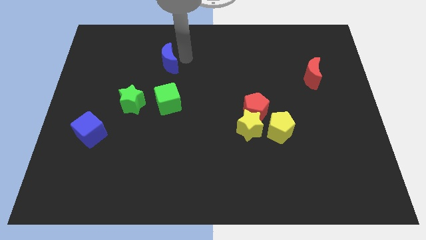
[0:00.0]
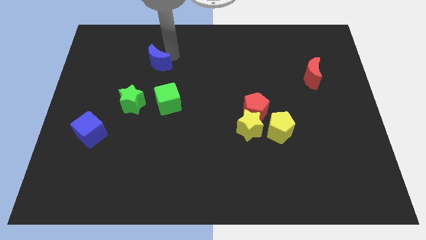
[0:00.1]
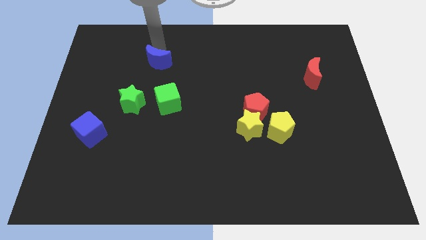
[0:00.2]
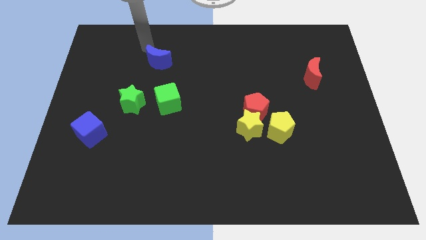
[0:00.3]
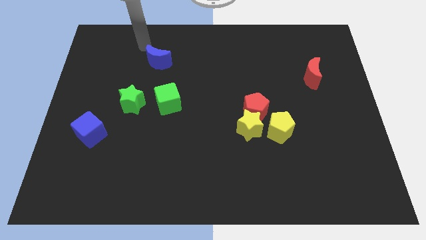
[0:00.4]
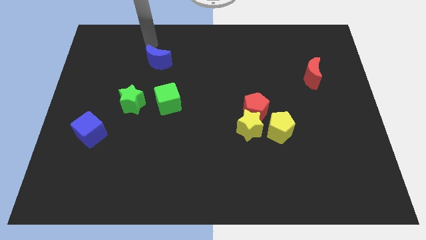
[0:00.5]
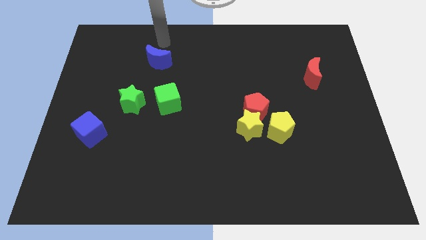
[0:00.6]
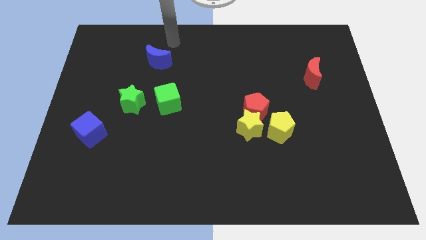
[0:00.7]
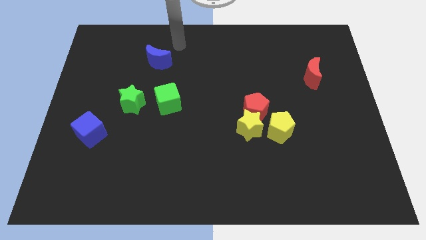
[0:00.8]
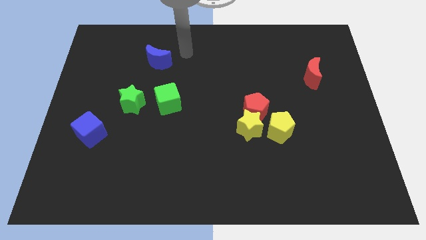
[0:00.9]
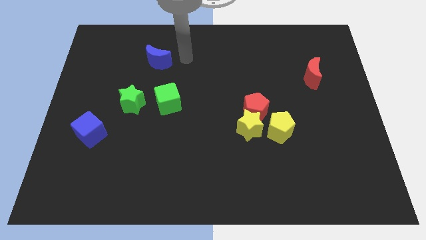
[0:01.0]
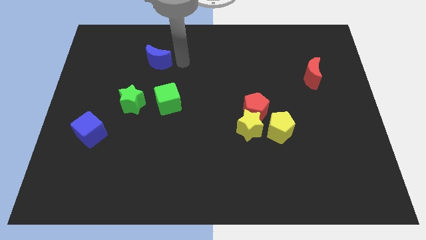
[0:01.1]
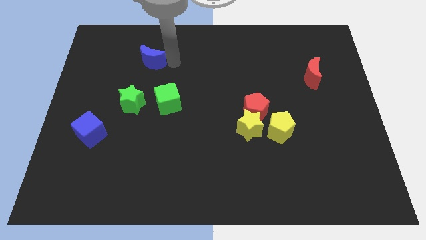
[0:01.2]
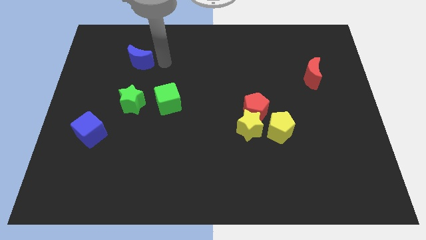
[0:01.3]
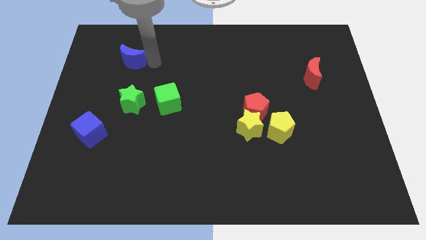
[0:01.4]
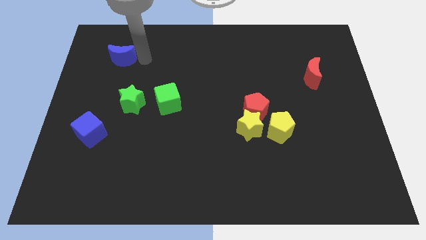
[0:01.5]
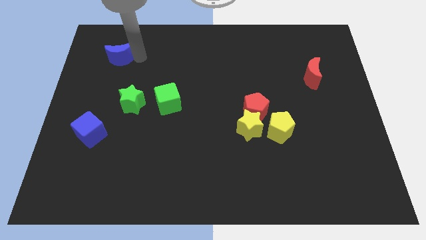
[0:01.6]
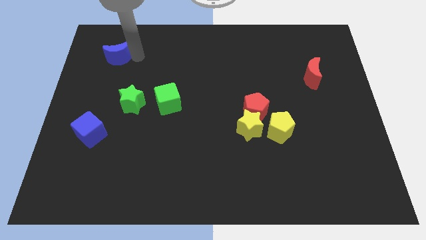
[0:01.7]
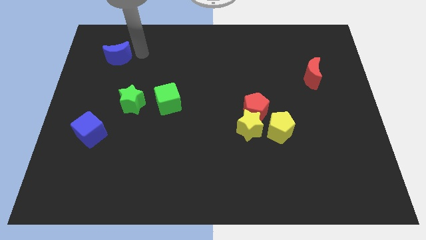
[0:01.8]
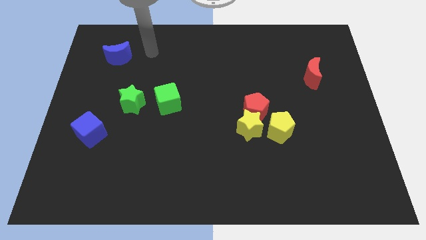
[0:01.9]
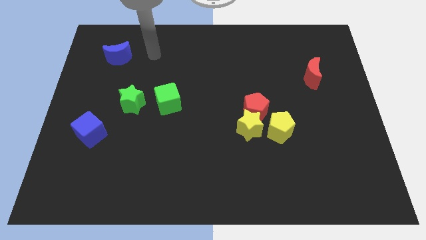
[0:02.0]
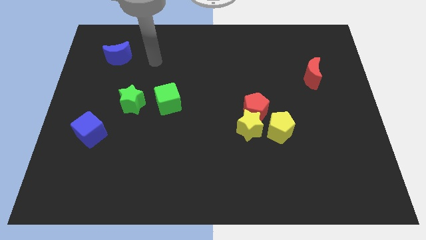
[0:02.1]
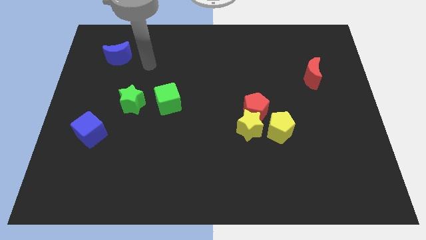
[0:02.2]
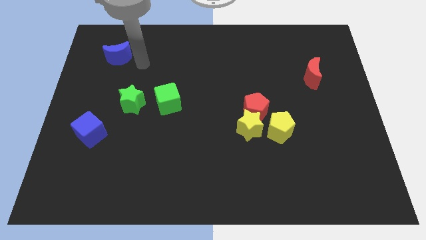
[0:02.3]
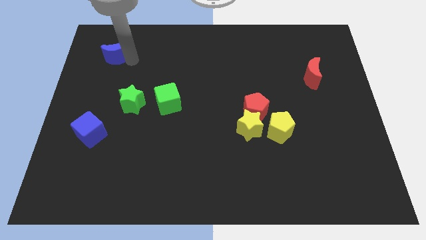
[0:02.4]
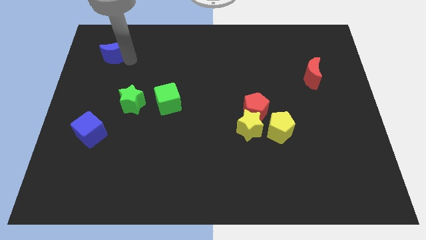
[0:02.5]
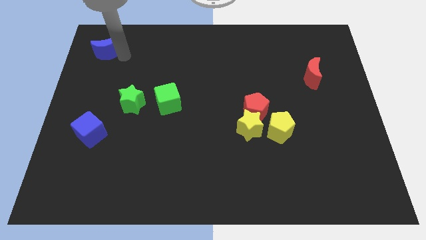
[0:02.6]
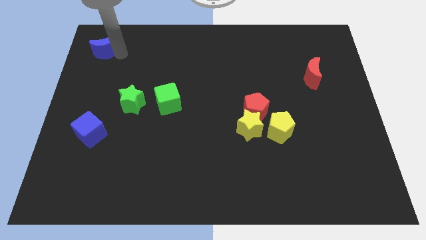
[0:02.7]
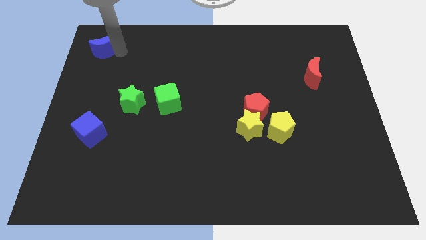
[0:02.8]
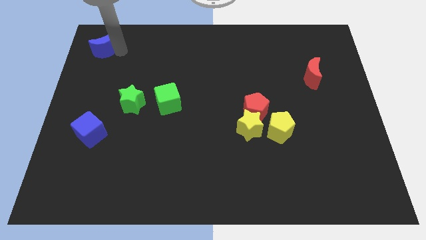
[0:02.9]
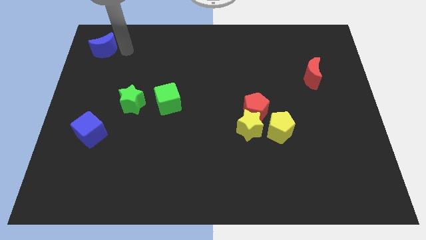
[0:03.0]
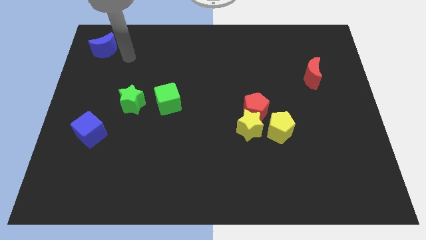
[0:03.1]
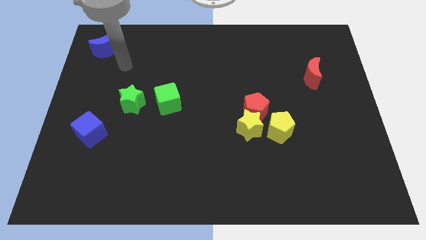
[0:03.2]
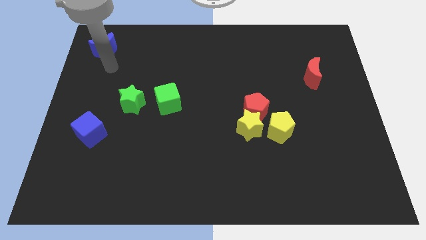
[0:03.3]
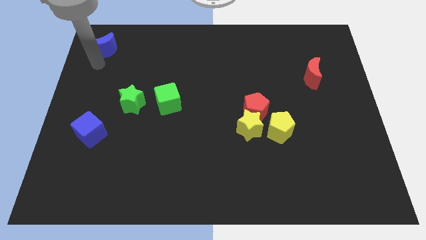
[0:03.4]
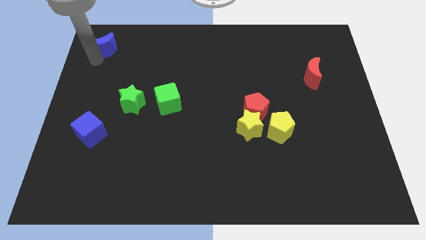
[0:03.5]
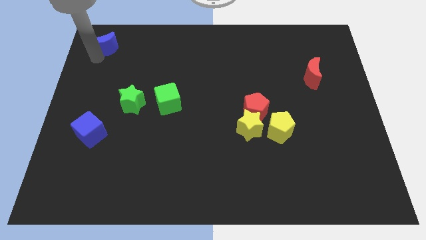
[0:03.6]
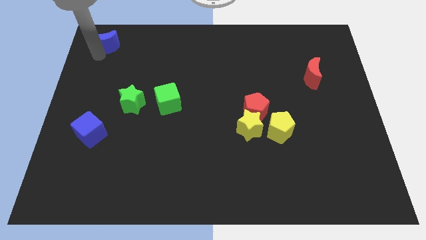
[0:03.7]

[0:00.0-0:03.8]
push the blue moon to the top left of the table

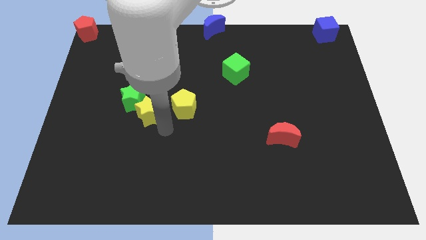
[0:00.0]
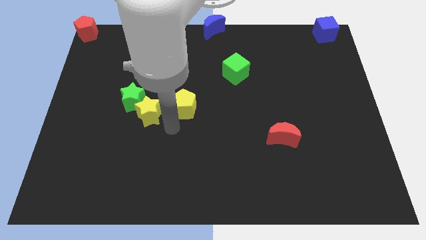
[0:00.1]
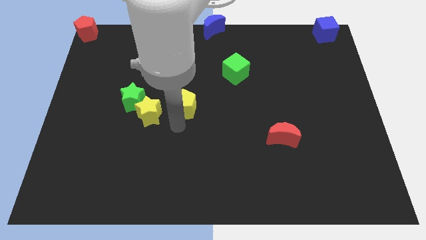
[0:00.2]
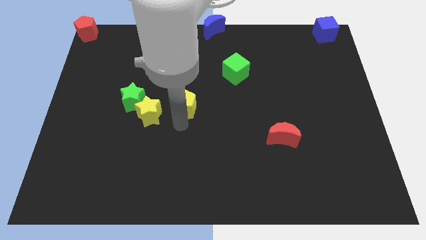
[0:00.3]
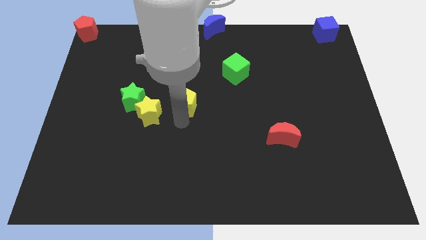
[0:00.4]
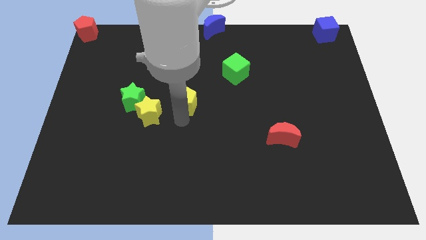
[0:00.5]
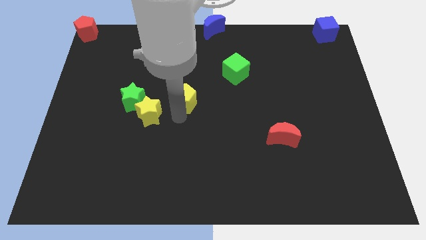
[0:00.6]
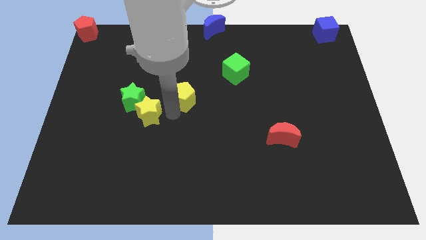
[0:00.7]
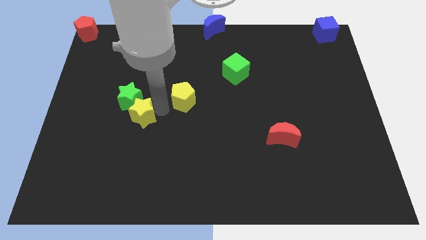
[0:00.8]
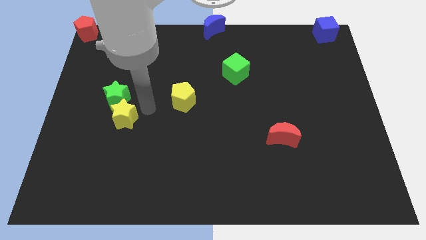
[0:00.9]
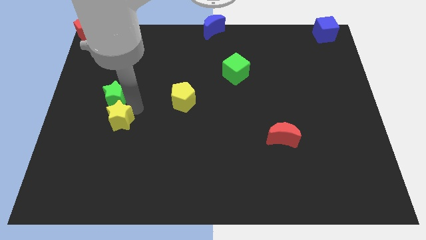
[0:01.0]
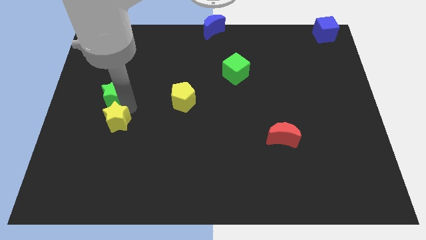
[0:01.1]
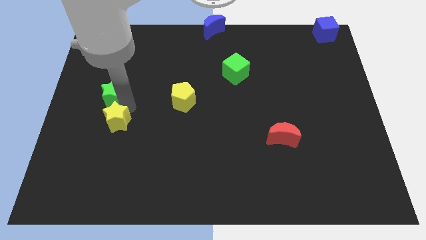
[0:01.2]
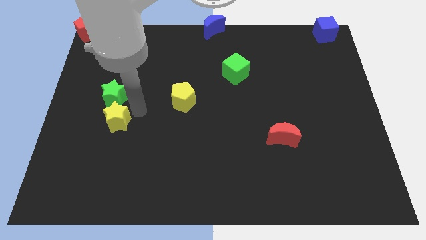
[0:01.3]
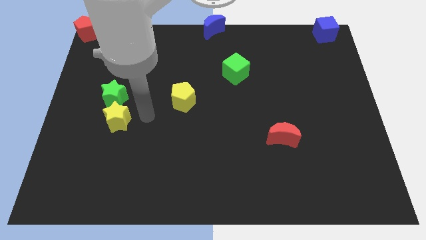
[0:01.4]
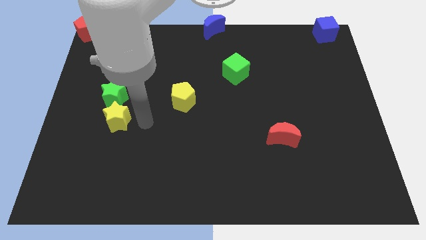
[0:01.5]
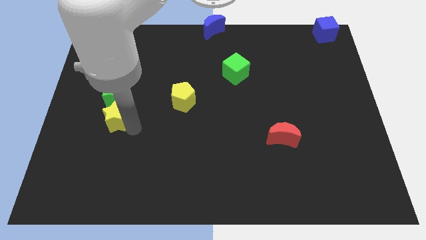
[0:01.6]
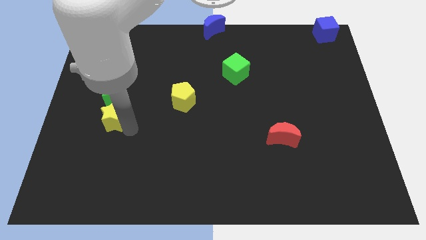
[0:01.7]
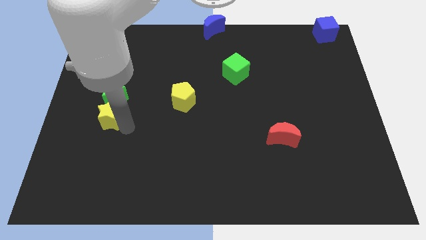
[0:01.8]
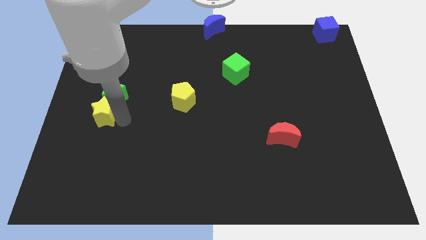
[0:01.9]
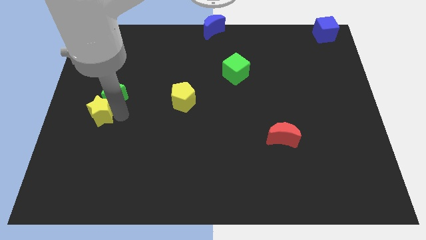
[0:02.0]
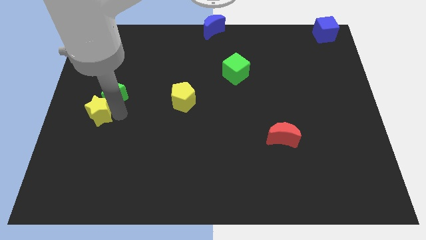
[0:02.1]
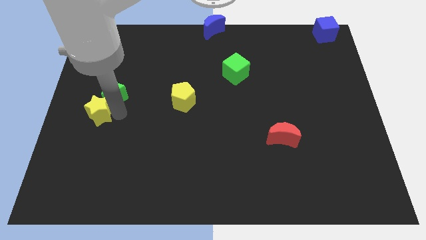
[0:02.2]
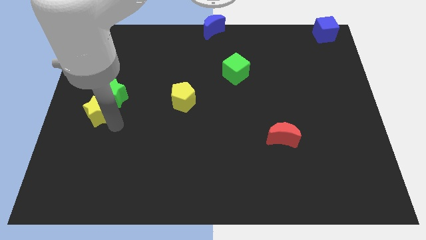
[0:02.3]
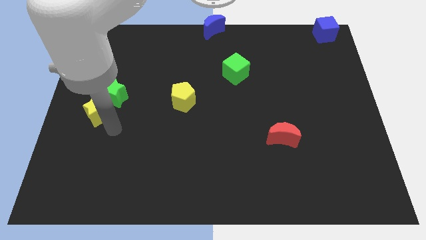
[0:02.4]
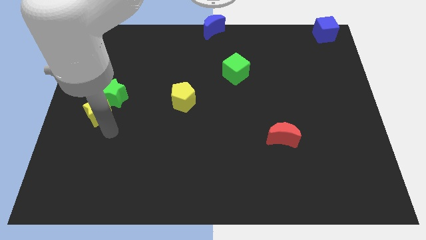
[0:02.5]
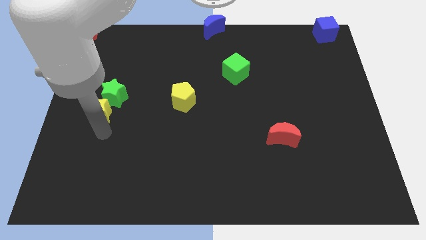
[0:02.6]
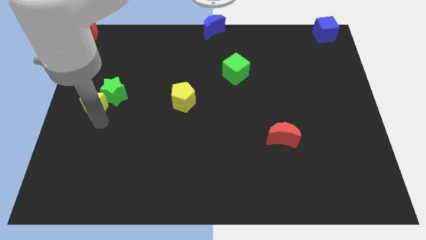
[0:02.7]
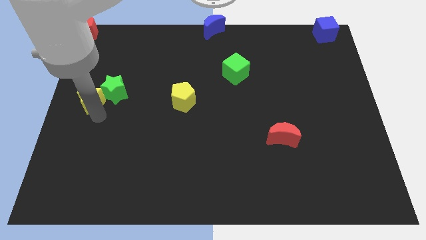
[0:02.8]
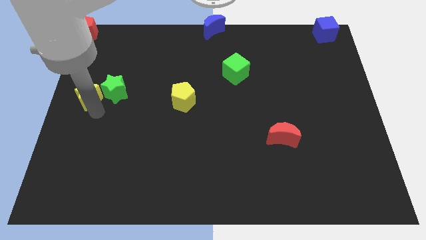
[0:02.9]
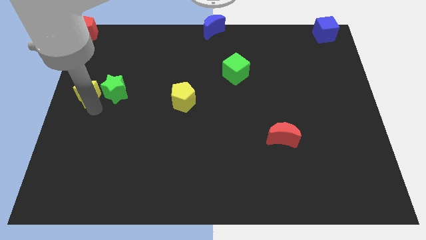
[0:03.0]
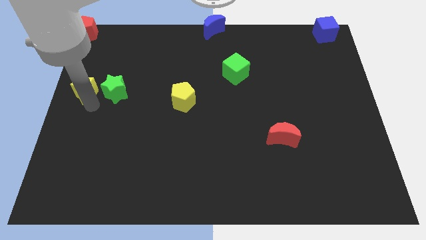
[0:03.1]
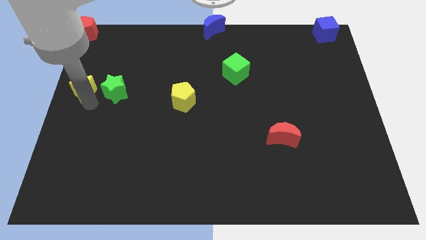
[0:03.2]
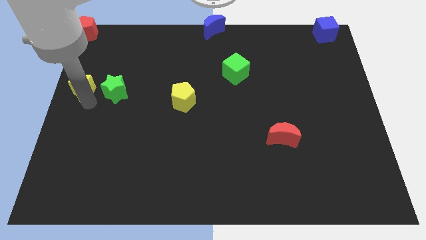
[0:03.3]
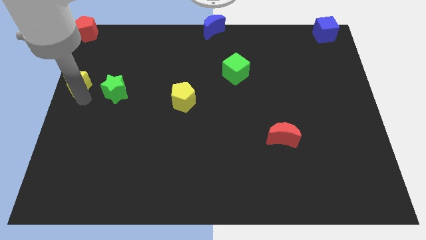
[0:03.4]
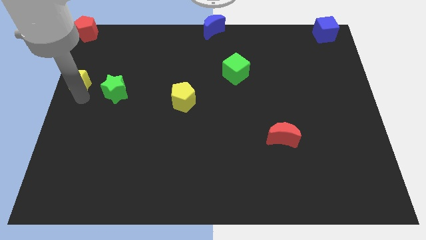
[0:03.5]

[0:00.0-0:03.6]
separate the yellow star from green star

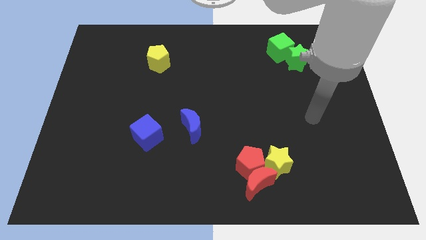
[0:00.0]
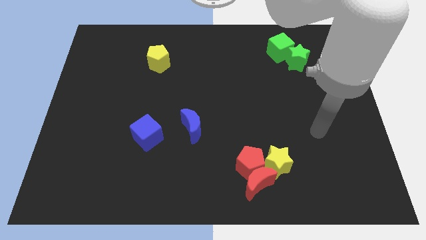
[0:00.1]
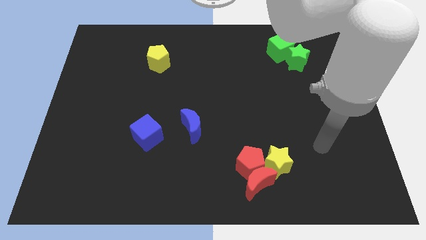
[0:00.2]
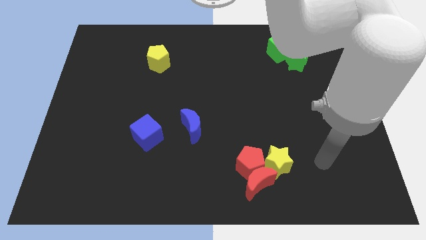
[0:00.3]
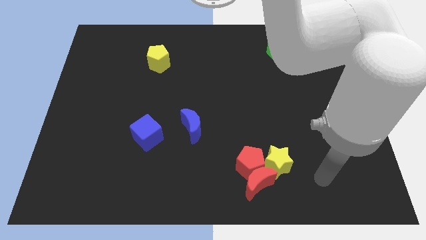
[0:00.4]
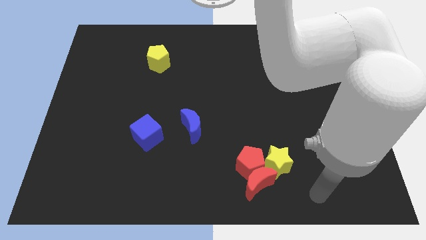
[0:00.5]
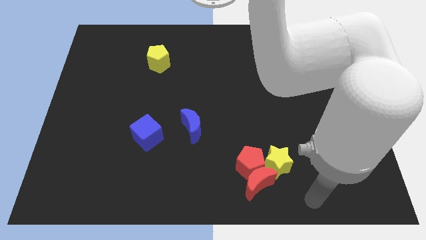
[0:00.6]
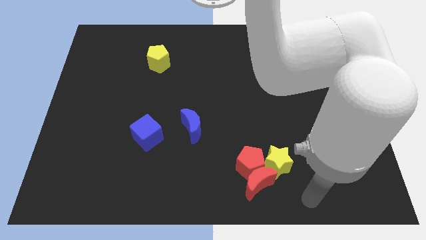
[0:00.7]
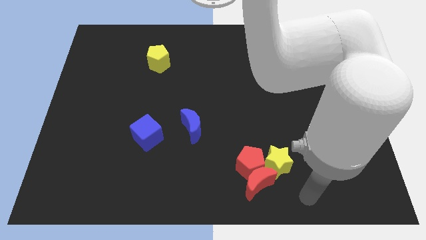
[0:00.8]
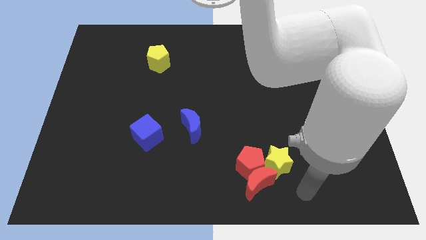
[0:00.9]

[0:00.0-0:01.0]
move your arm away from the green blocks

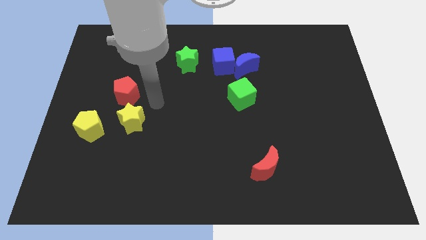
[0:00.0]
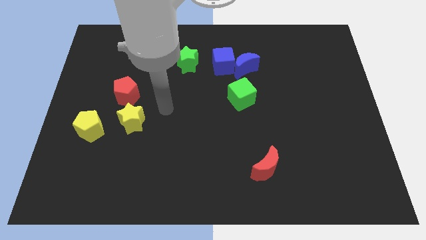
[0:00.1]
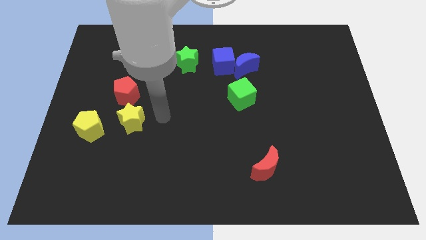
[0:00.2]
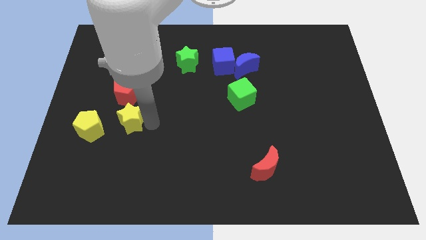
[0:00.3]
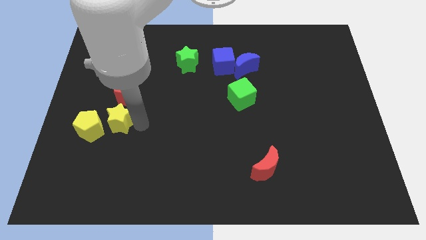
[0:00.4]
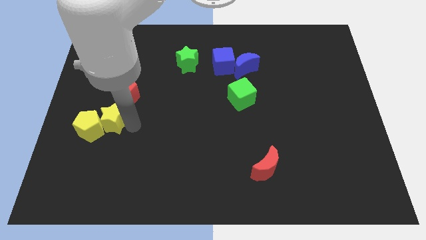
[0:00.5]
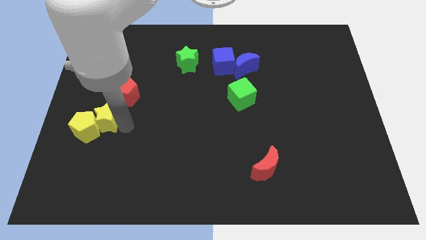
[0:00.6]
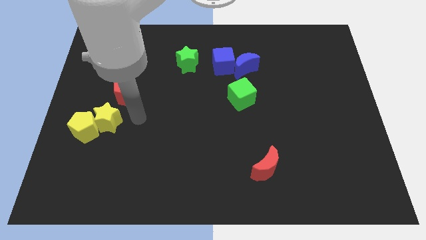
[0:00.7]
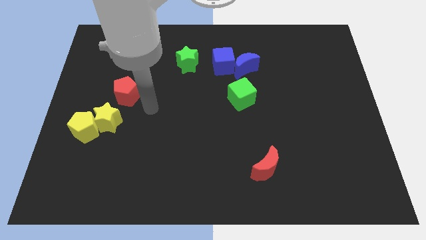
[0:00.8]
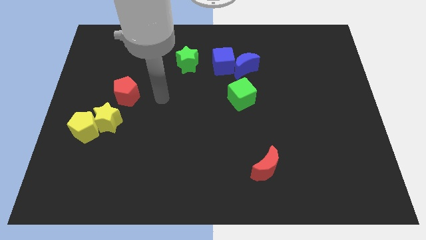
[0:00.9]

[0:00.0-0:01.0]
push yellow star into yellow pentagon
